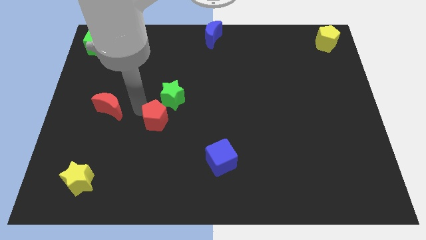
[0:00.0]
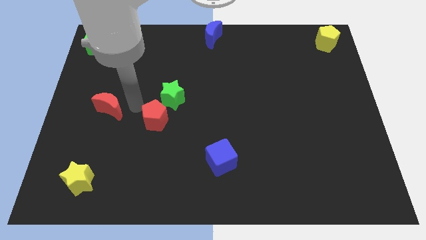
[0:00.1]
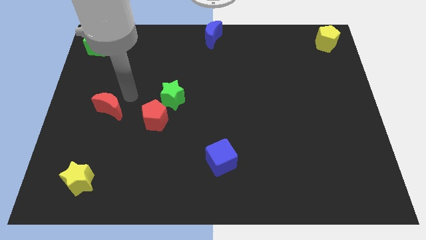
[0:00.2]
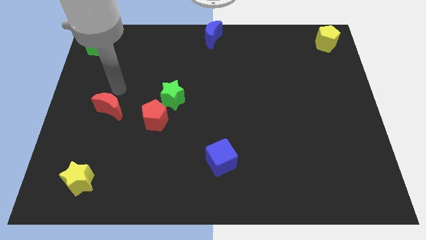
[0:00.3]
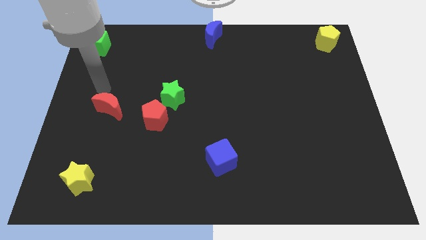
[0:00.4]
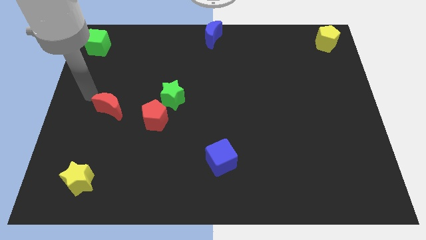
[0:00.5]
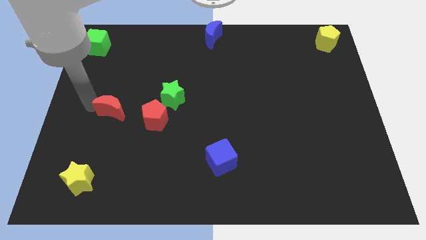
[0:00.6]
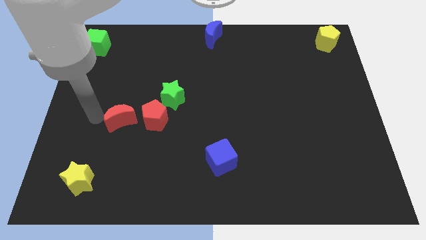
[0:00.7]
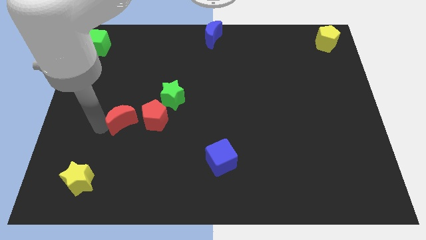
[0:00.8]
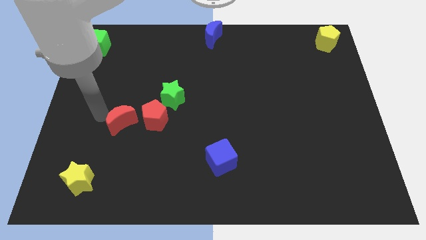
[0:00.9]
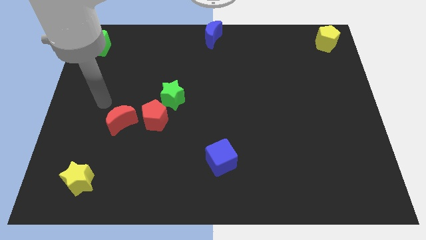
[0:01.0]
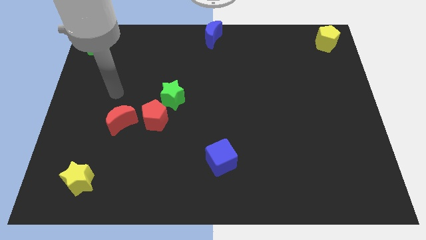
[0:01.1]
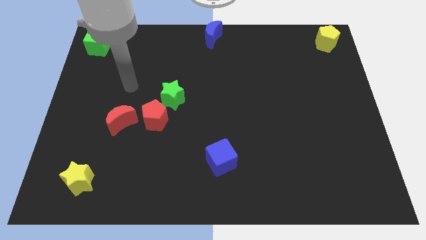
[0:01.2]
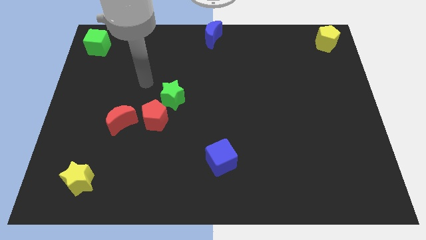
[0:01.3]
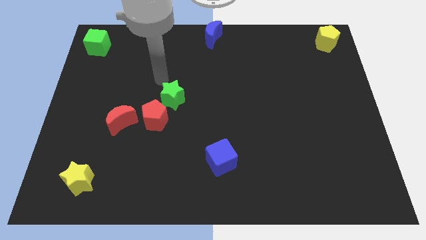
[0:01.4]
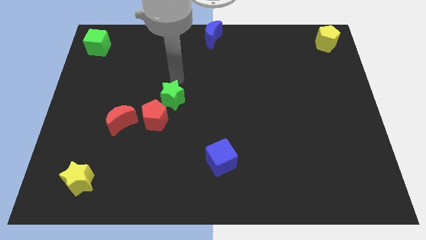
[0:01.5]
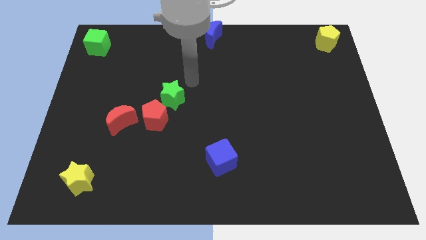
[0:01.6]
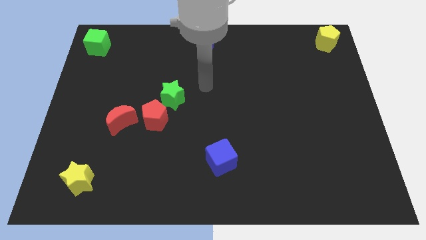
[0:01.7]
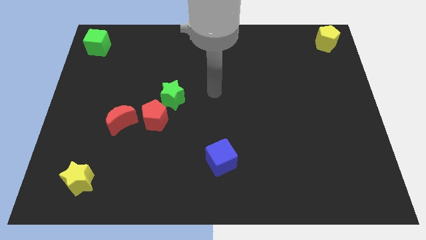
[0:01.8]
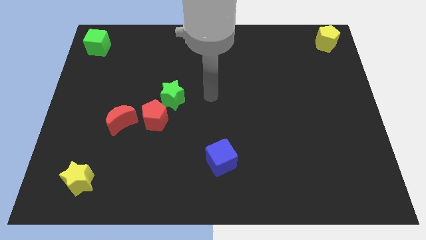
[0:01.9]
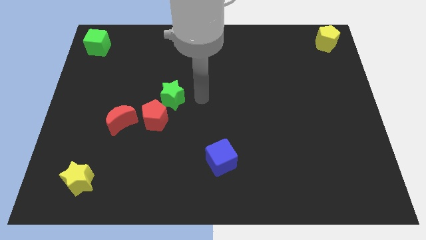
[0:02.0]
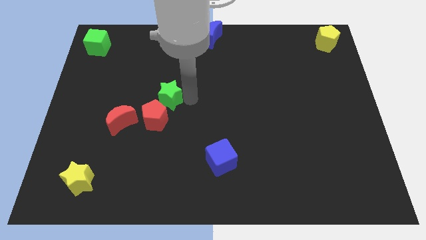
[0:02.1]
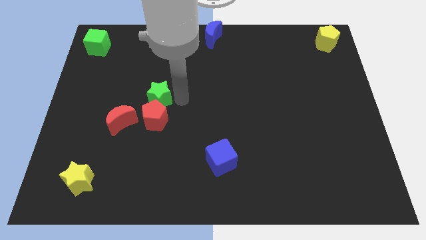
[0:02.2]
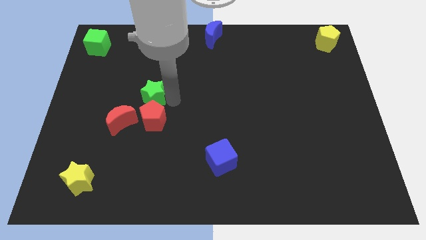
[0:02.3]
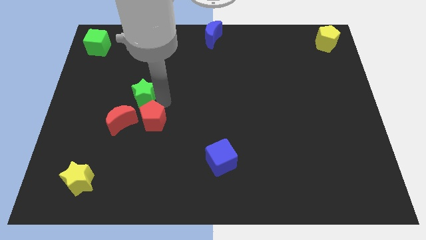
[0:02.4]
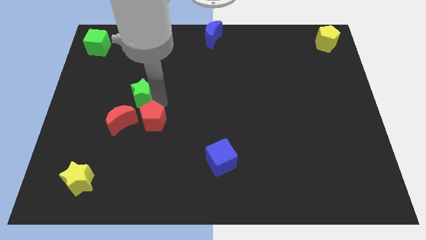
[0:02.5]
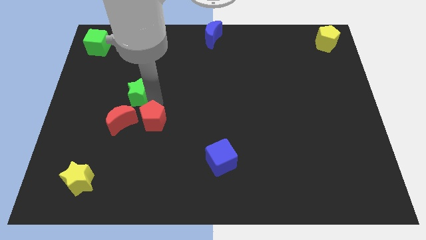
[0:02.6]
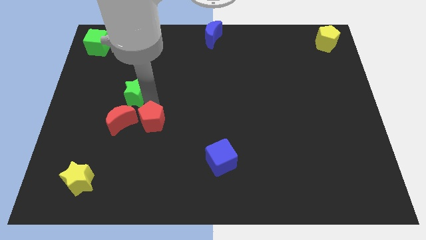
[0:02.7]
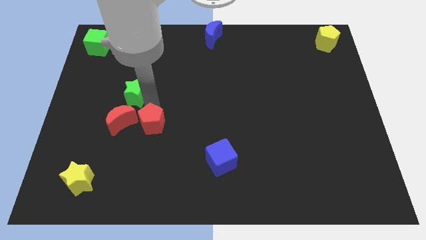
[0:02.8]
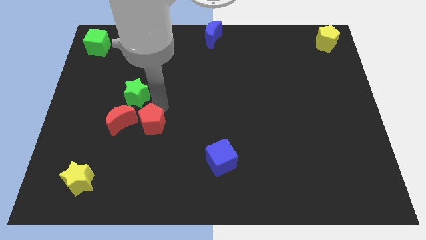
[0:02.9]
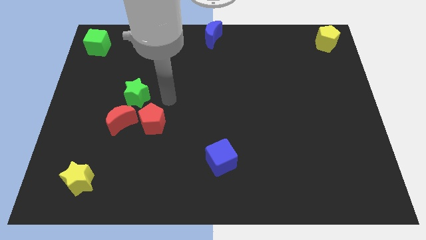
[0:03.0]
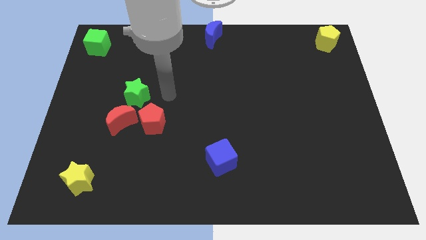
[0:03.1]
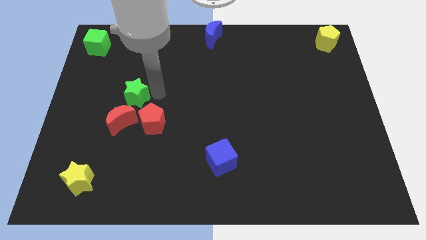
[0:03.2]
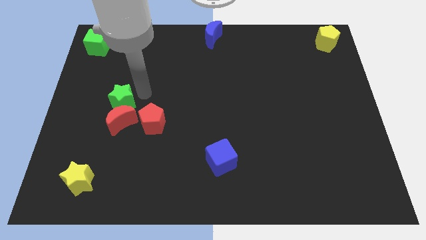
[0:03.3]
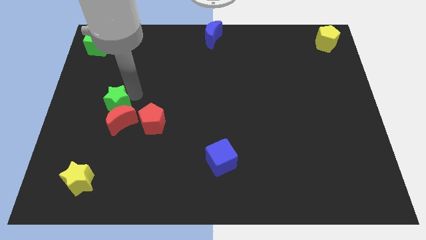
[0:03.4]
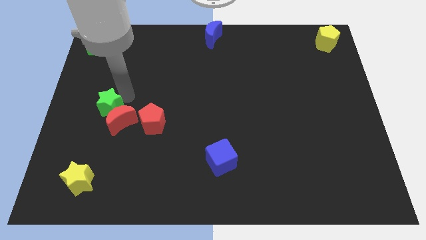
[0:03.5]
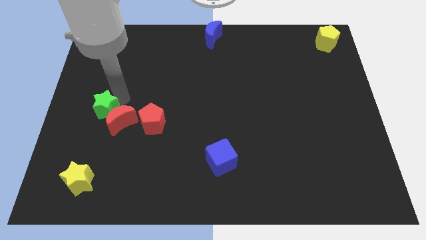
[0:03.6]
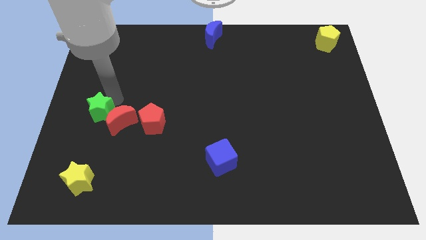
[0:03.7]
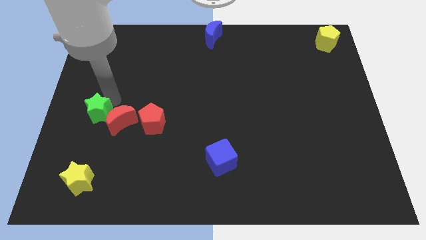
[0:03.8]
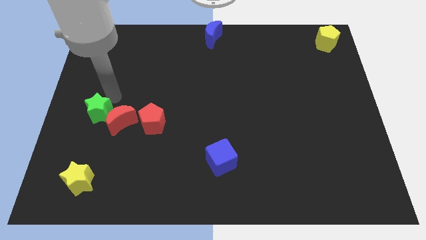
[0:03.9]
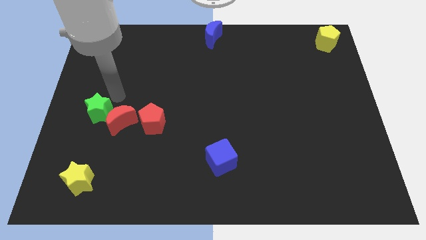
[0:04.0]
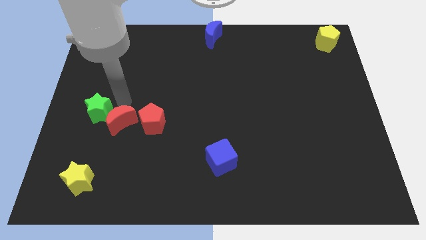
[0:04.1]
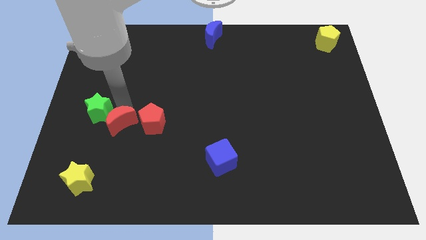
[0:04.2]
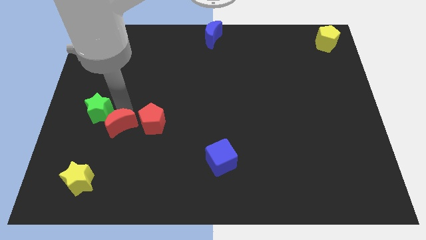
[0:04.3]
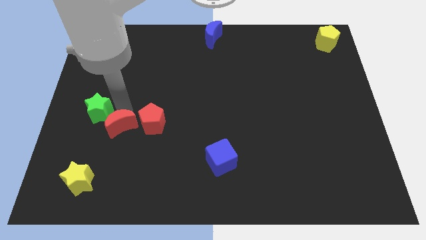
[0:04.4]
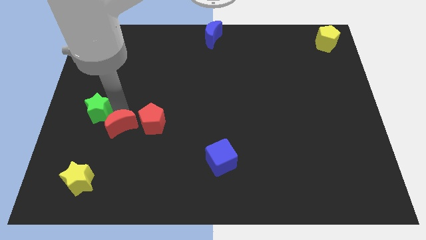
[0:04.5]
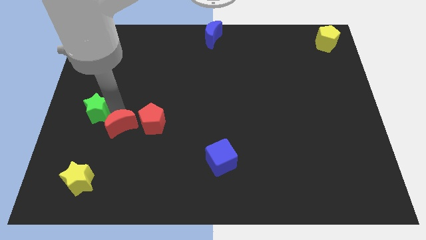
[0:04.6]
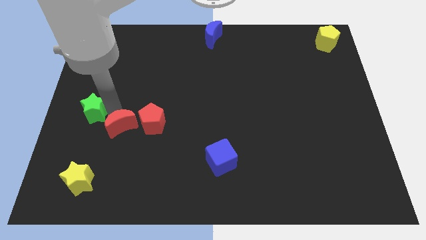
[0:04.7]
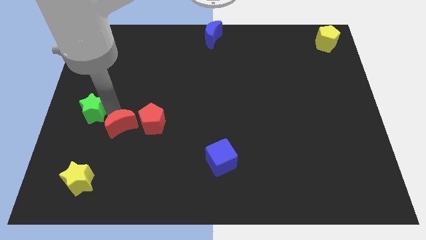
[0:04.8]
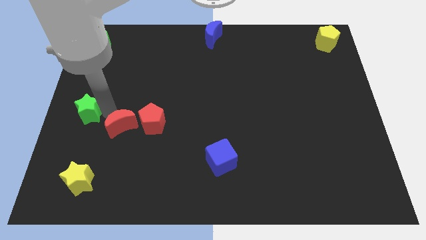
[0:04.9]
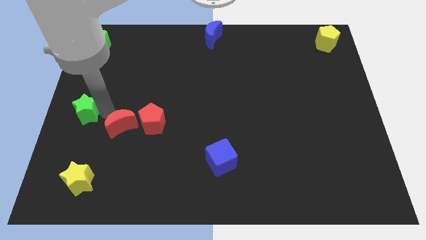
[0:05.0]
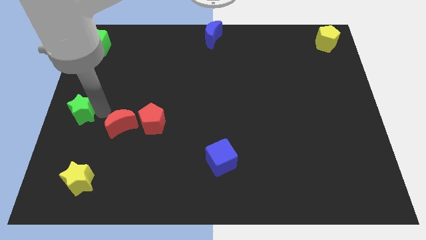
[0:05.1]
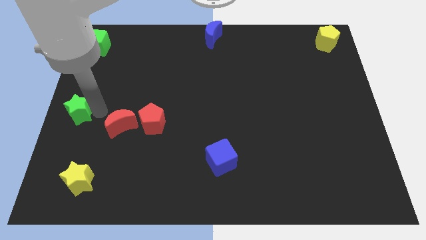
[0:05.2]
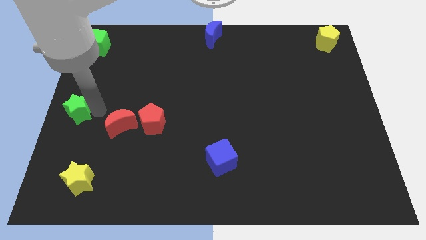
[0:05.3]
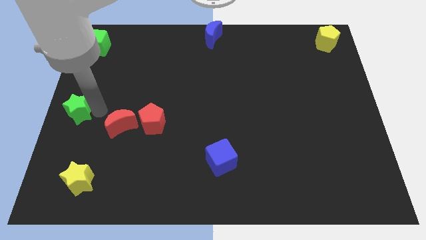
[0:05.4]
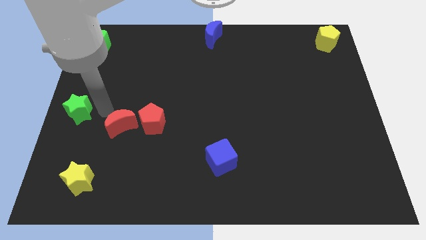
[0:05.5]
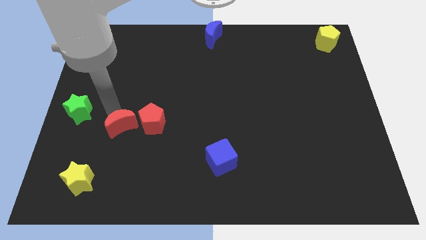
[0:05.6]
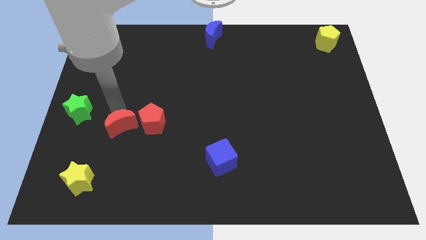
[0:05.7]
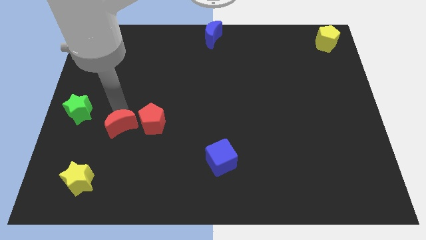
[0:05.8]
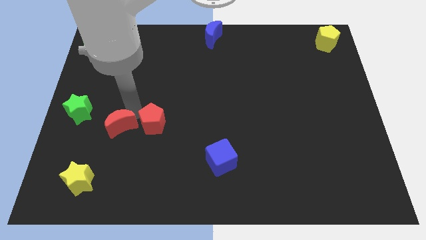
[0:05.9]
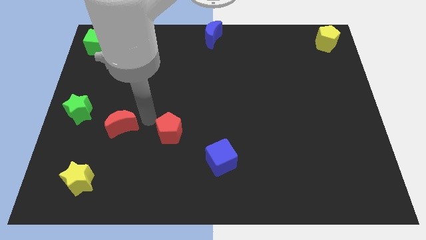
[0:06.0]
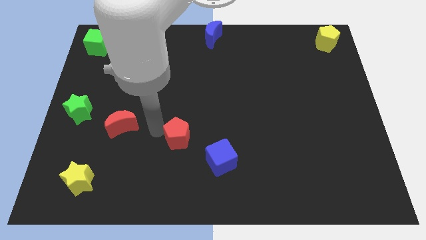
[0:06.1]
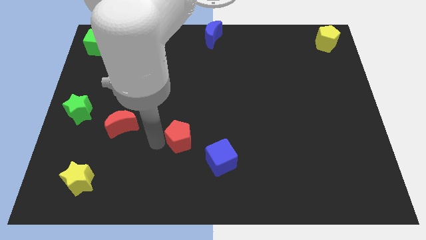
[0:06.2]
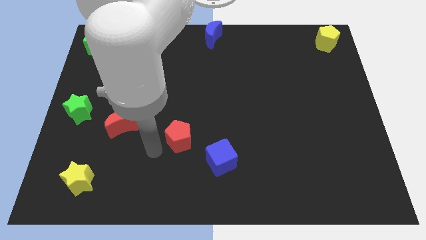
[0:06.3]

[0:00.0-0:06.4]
separate green star and red pentagon from group of blocks

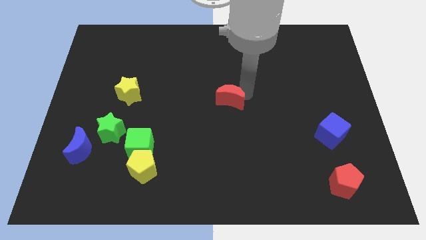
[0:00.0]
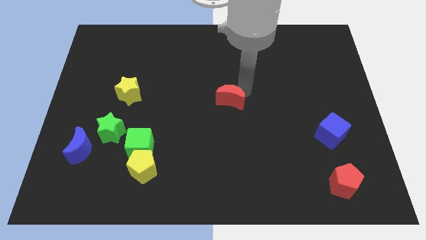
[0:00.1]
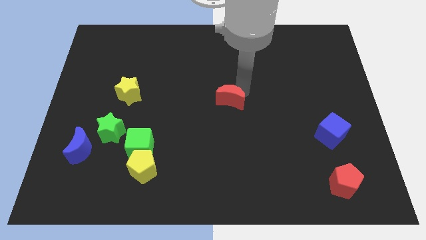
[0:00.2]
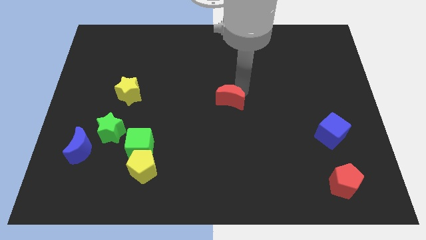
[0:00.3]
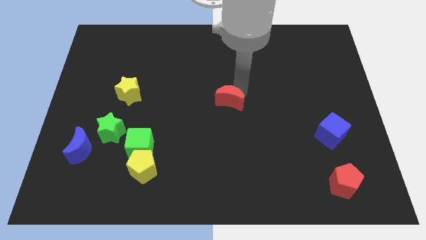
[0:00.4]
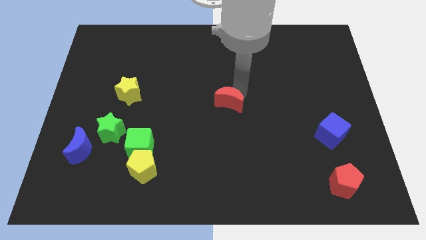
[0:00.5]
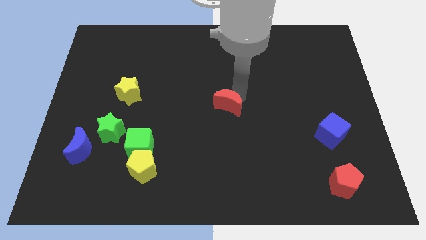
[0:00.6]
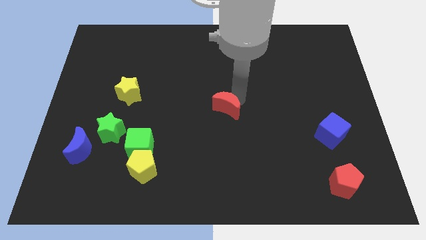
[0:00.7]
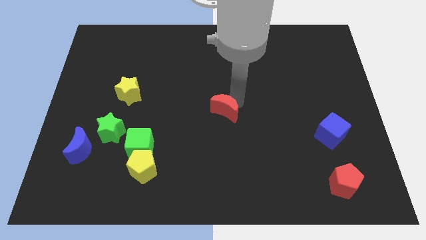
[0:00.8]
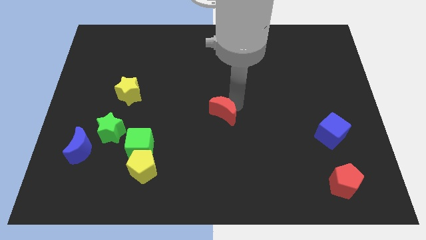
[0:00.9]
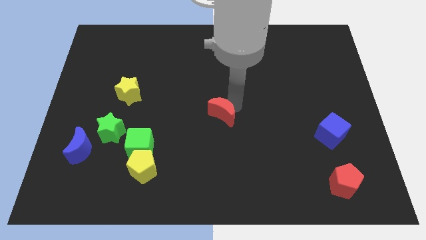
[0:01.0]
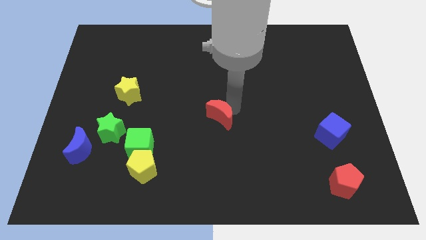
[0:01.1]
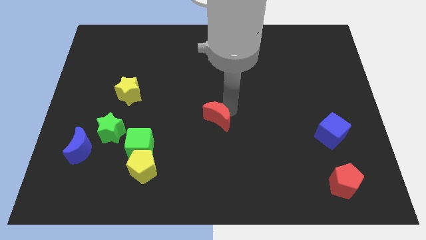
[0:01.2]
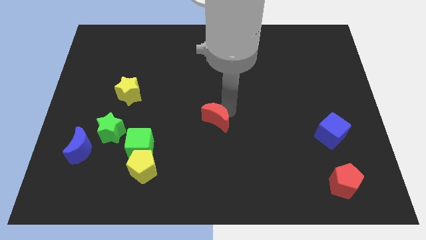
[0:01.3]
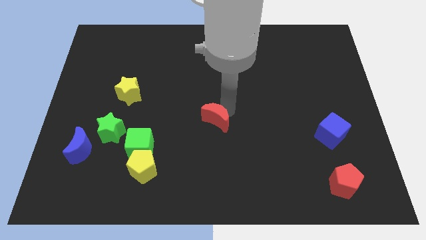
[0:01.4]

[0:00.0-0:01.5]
push the red crescent to the center of the board

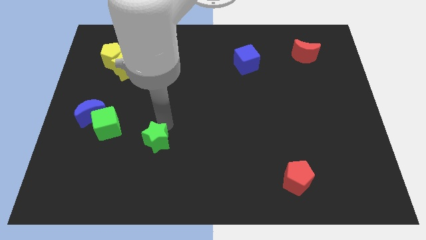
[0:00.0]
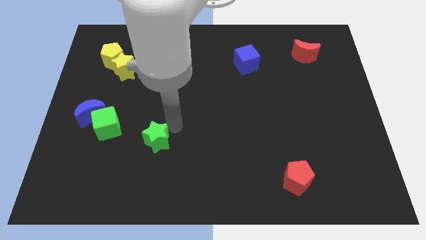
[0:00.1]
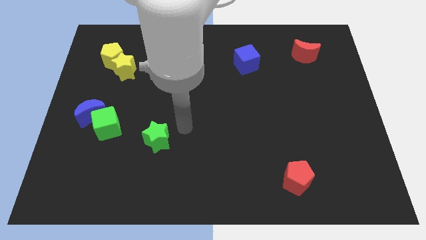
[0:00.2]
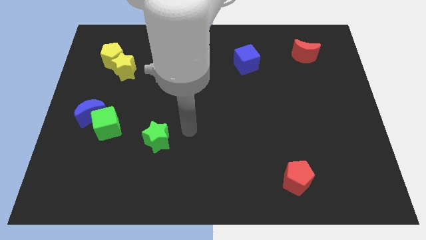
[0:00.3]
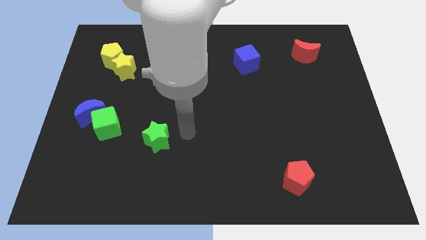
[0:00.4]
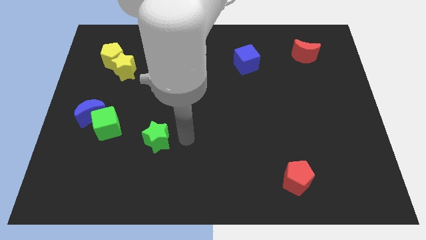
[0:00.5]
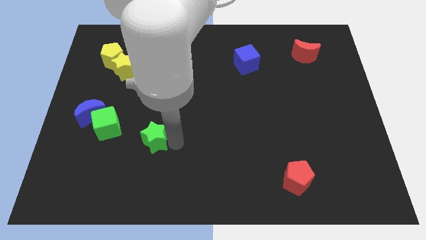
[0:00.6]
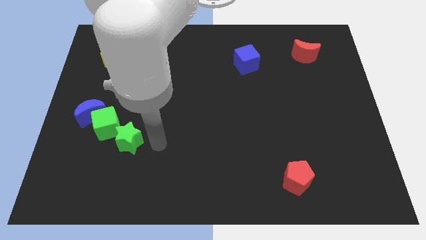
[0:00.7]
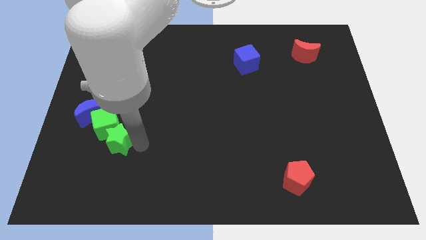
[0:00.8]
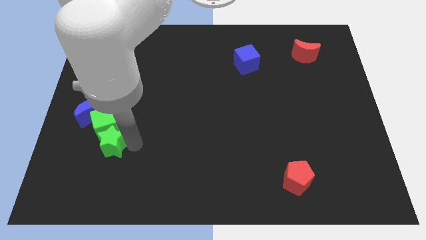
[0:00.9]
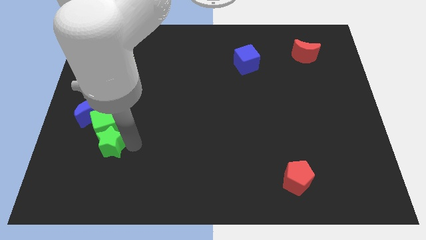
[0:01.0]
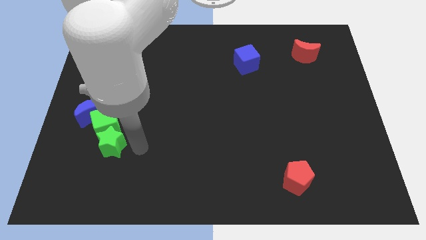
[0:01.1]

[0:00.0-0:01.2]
move green star to the bottom of the green cube

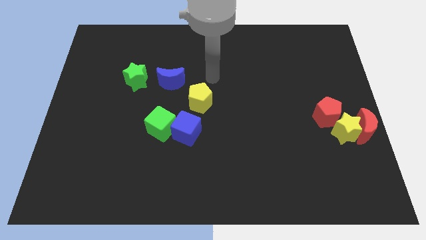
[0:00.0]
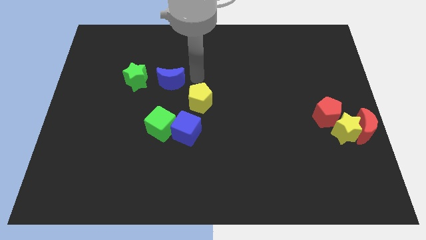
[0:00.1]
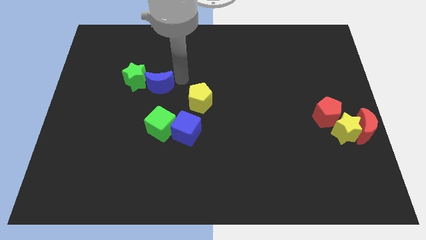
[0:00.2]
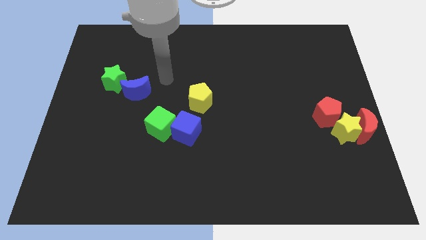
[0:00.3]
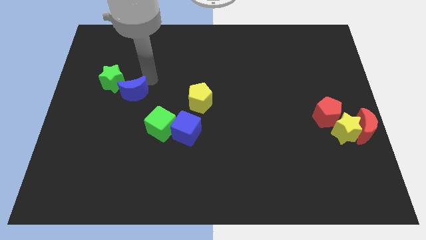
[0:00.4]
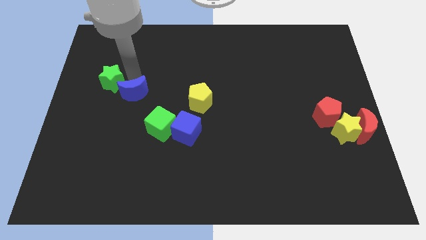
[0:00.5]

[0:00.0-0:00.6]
move the blue crescent below the green star
